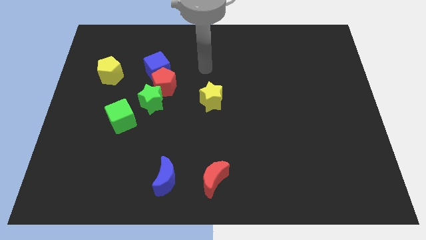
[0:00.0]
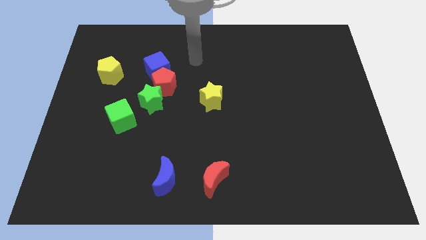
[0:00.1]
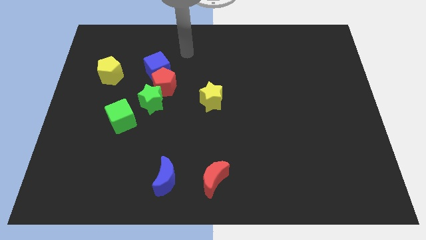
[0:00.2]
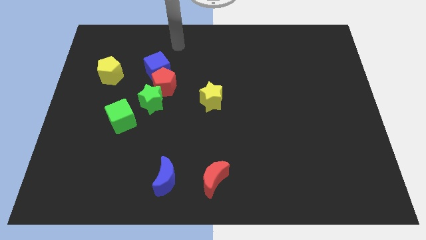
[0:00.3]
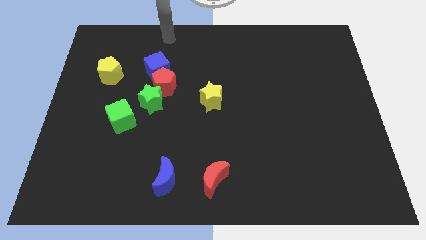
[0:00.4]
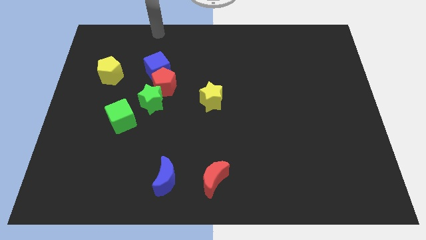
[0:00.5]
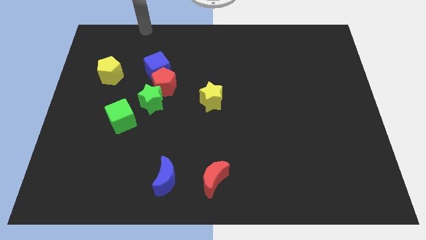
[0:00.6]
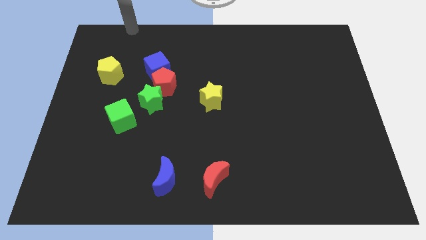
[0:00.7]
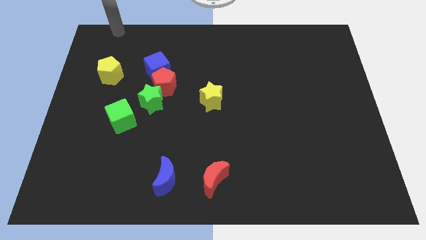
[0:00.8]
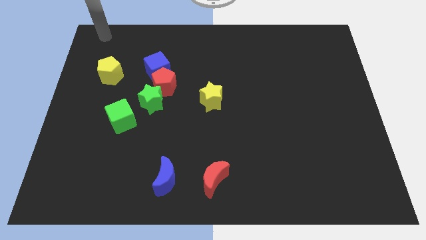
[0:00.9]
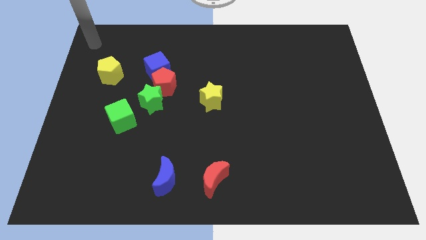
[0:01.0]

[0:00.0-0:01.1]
move the arm away from the yellow star

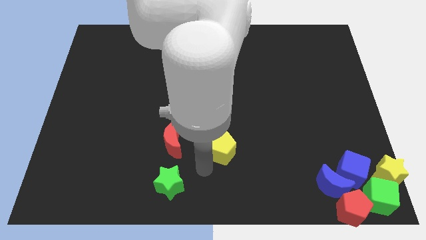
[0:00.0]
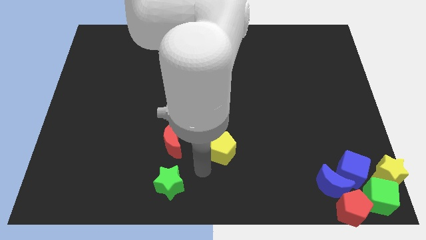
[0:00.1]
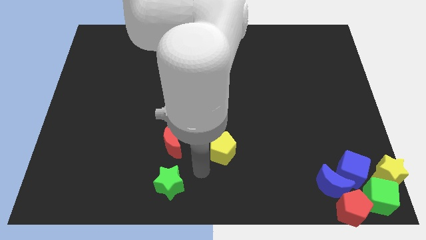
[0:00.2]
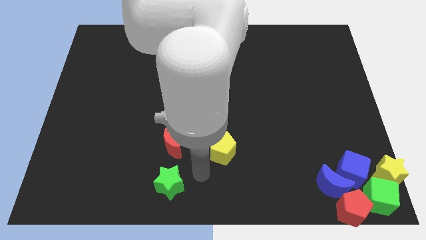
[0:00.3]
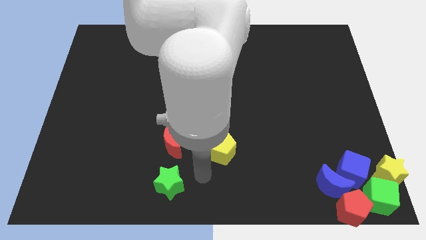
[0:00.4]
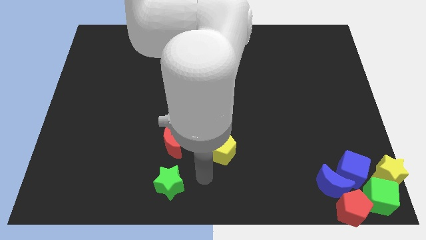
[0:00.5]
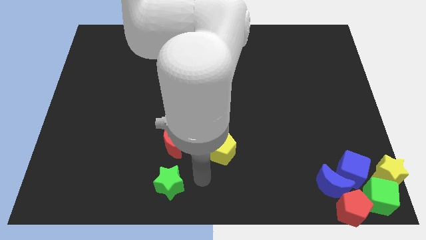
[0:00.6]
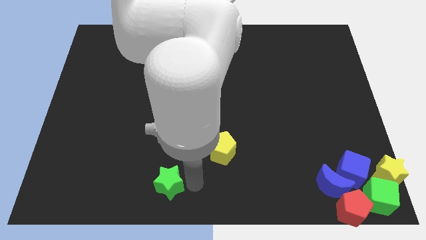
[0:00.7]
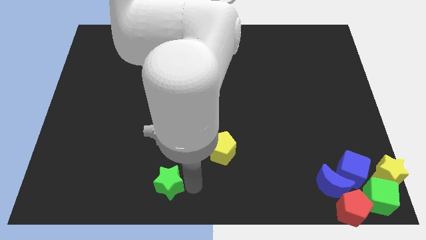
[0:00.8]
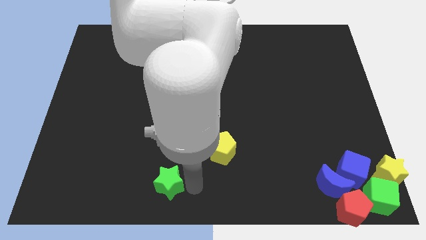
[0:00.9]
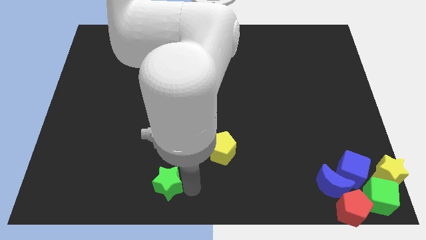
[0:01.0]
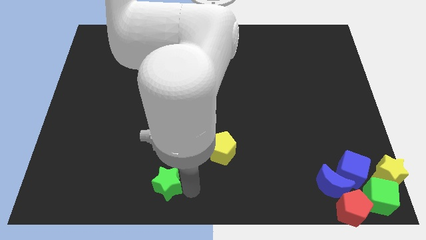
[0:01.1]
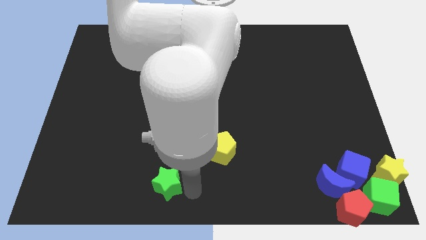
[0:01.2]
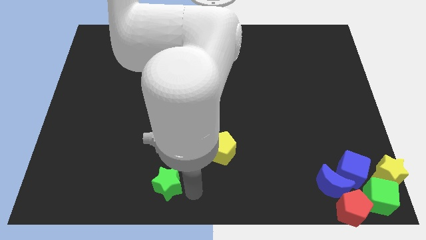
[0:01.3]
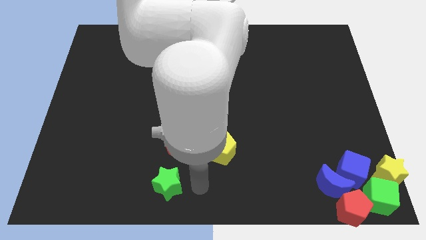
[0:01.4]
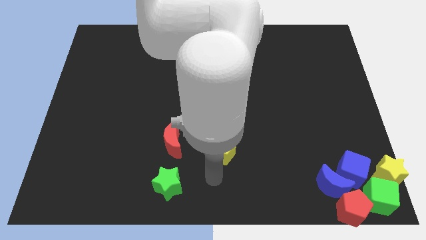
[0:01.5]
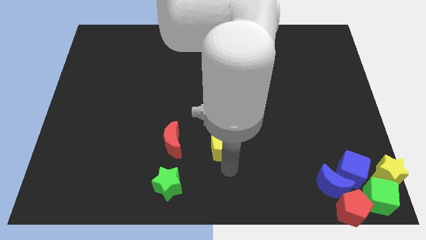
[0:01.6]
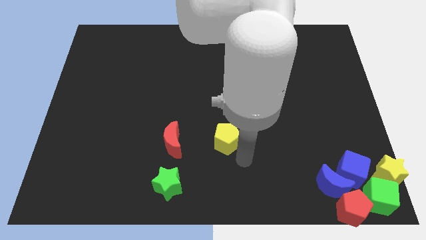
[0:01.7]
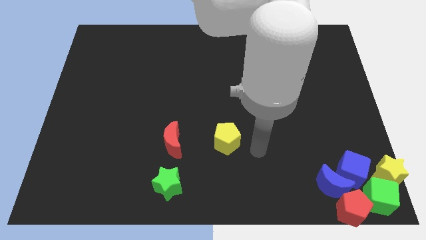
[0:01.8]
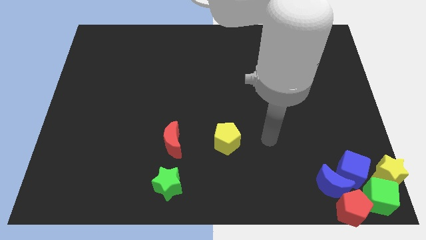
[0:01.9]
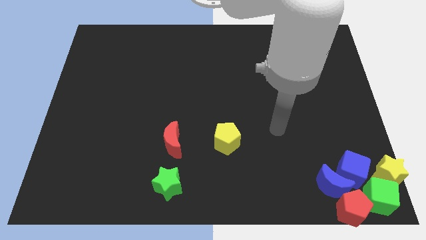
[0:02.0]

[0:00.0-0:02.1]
slightly push yellow pentagon to the top

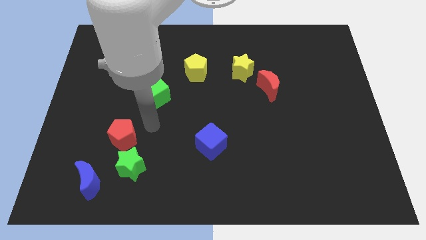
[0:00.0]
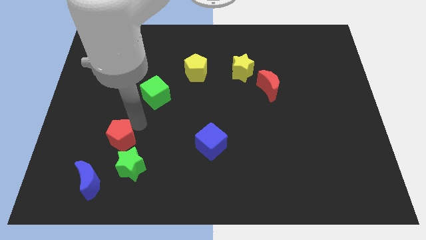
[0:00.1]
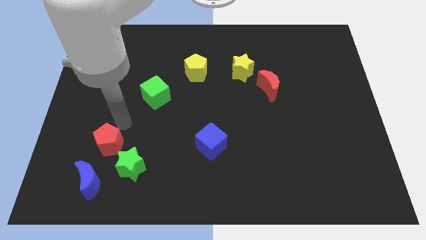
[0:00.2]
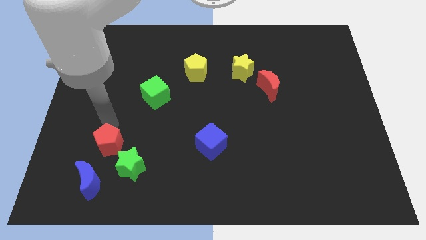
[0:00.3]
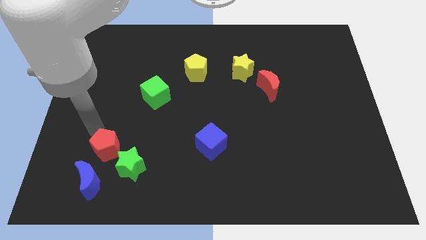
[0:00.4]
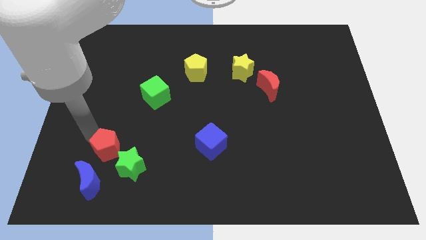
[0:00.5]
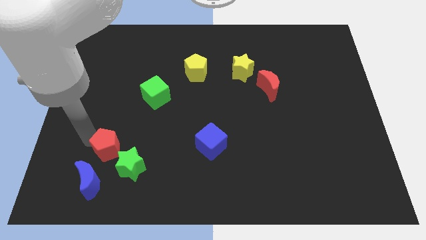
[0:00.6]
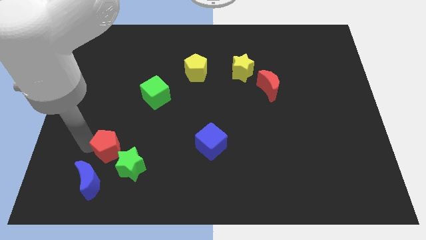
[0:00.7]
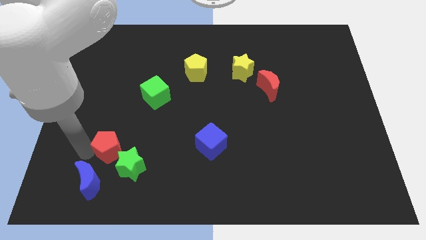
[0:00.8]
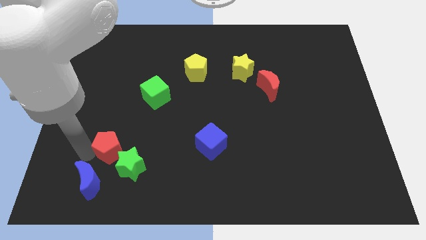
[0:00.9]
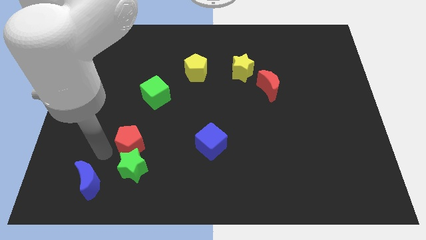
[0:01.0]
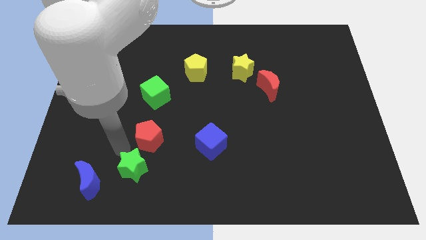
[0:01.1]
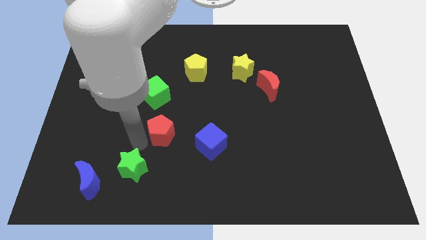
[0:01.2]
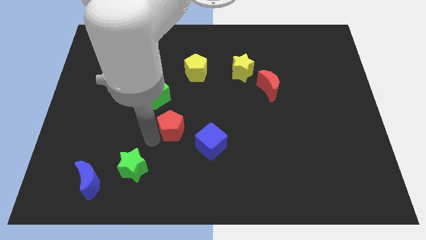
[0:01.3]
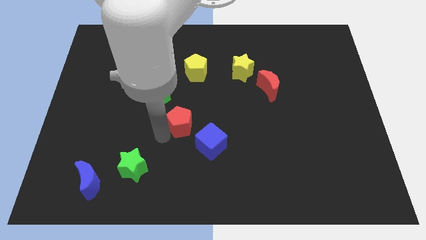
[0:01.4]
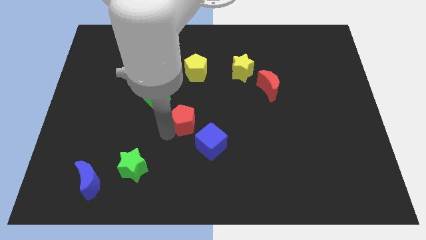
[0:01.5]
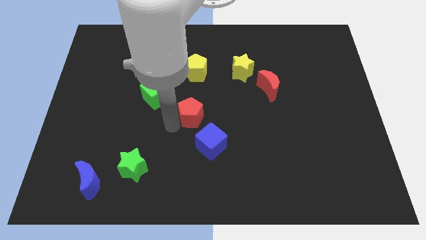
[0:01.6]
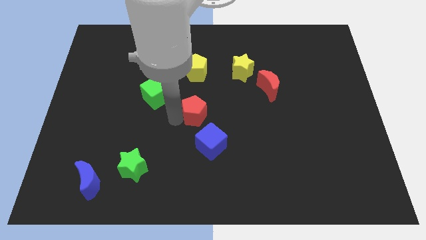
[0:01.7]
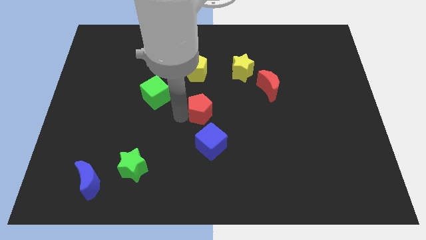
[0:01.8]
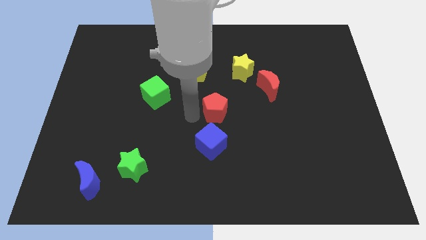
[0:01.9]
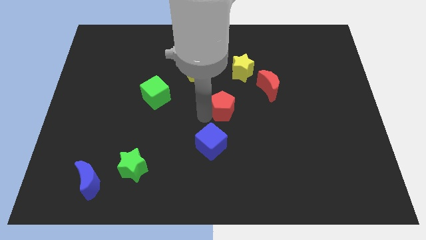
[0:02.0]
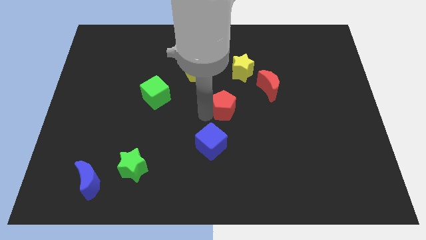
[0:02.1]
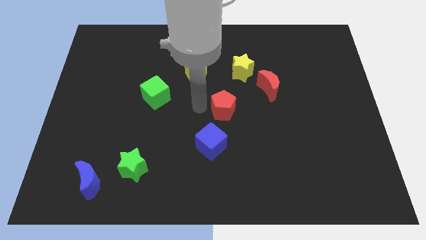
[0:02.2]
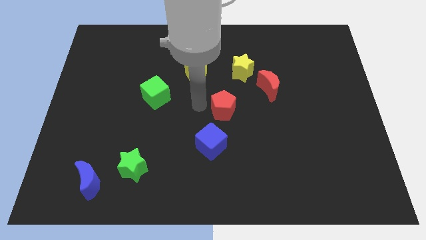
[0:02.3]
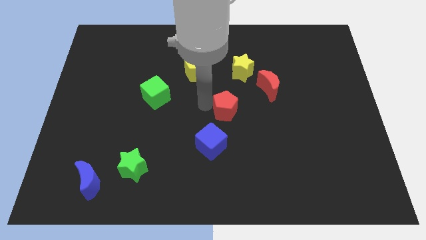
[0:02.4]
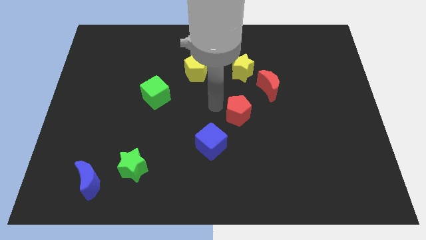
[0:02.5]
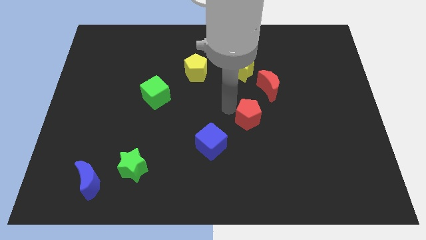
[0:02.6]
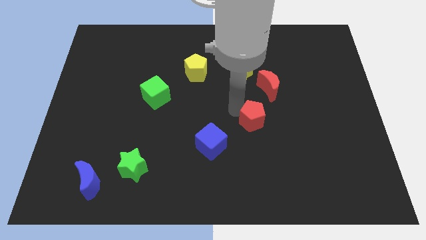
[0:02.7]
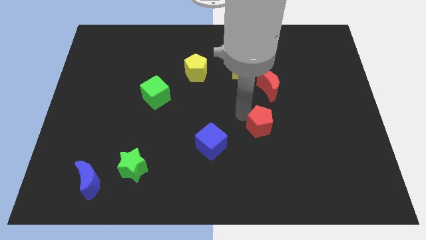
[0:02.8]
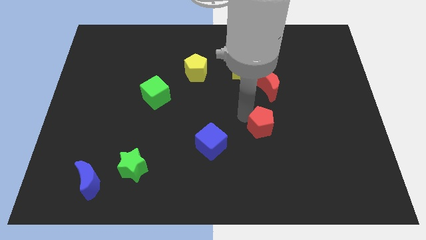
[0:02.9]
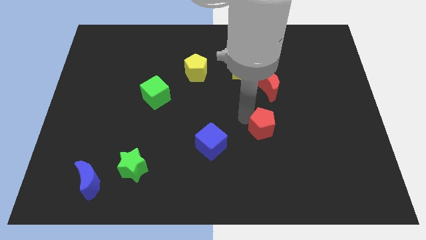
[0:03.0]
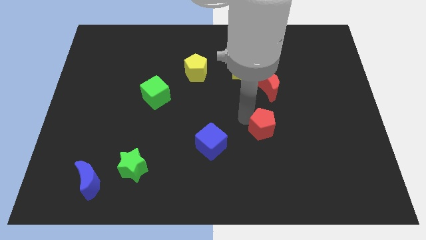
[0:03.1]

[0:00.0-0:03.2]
move the red pentagon to the bottom of the red crescent

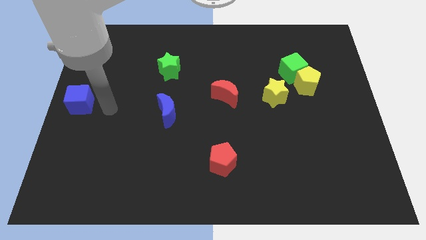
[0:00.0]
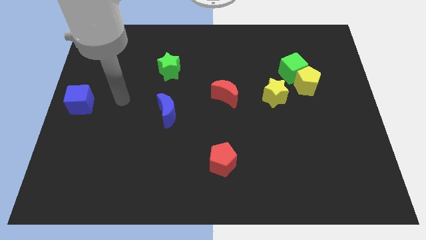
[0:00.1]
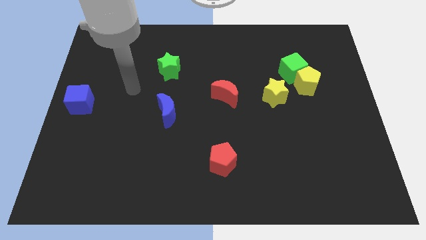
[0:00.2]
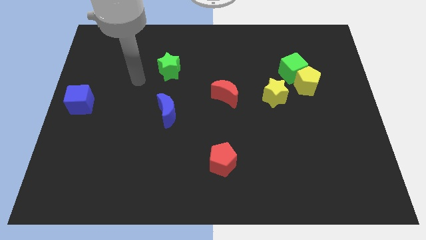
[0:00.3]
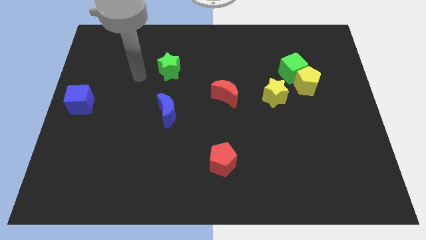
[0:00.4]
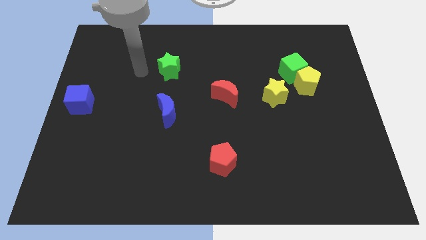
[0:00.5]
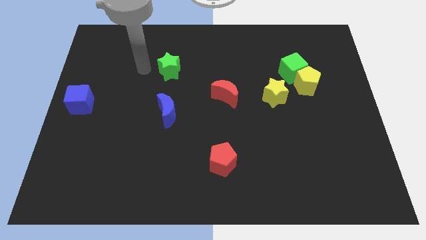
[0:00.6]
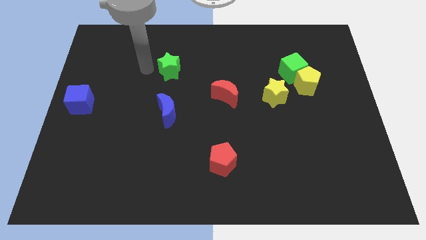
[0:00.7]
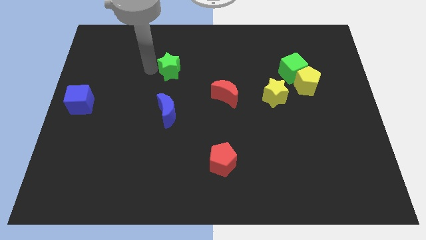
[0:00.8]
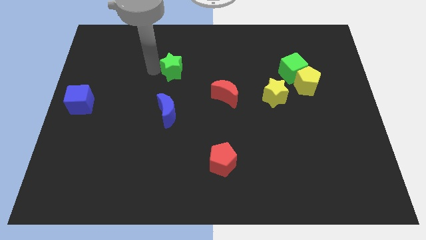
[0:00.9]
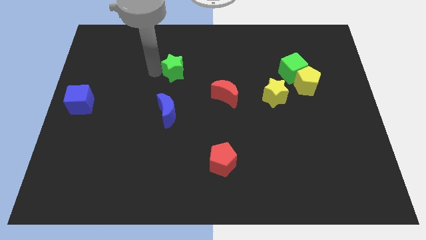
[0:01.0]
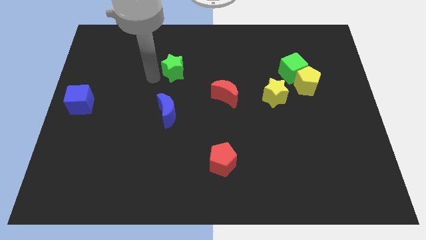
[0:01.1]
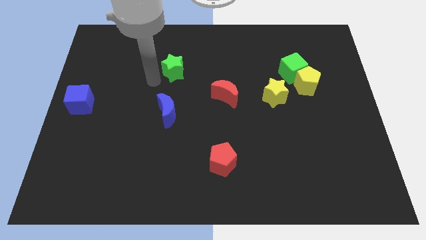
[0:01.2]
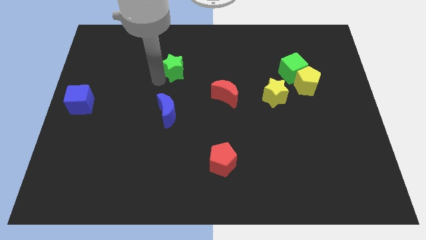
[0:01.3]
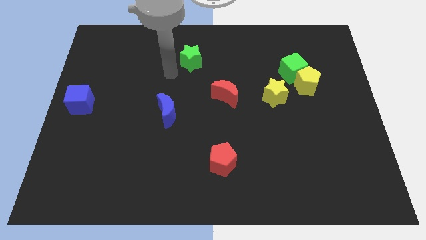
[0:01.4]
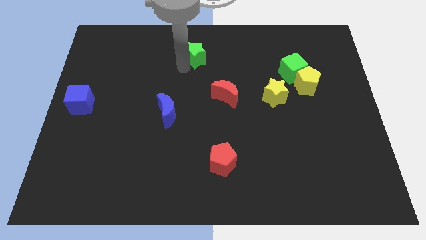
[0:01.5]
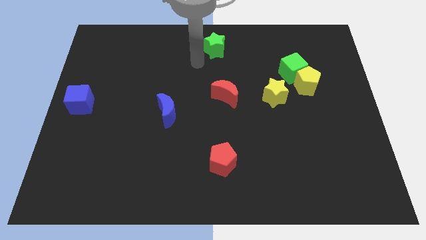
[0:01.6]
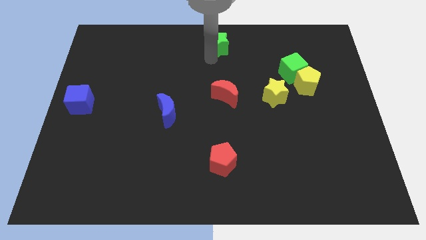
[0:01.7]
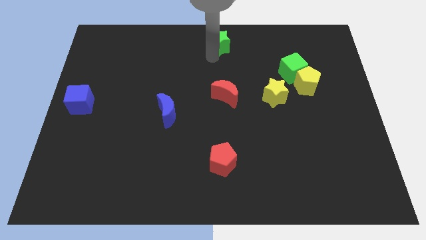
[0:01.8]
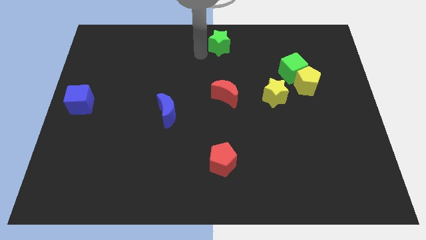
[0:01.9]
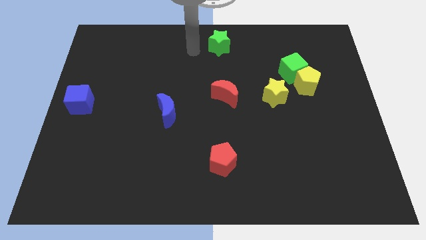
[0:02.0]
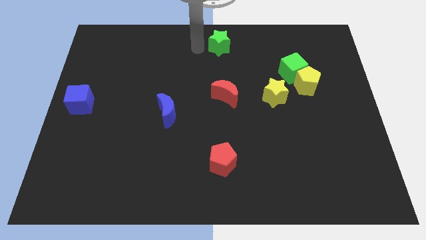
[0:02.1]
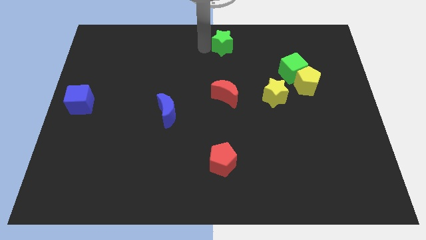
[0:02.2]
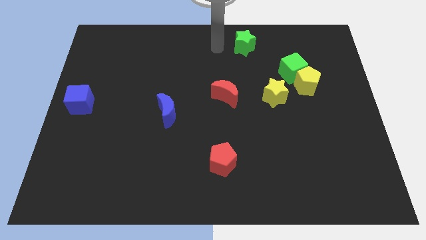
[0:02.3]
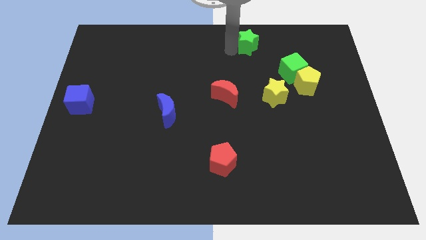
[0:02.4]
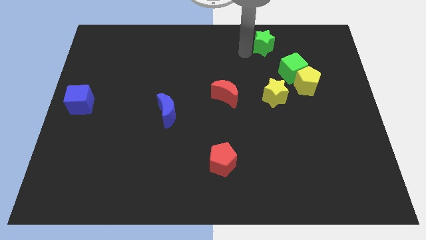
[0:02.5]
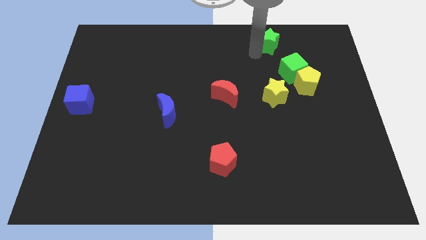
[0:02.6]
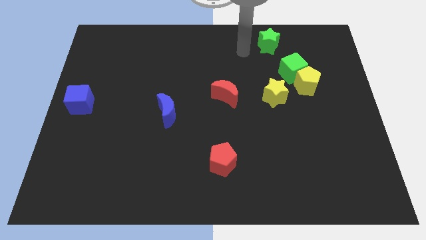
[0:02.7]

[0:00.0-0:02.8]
place the green star at the top of the yellow star
